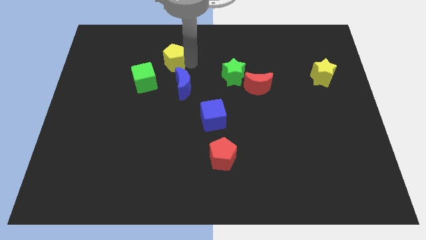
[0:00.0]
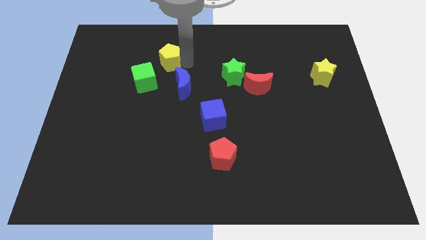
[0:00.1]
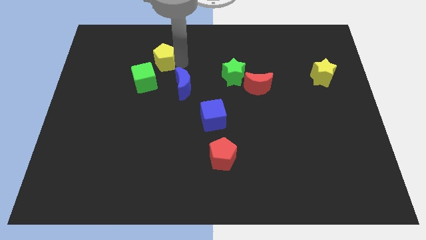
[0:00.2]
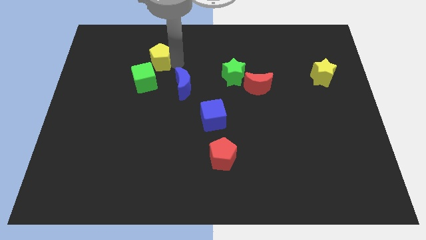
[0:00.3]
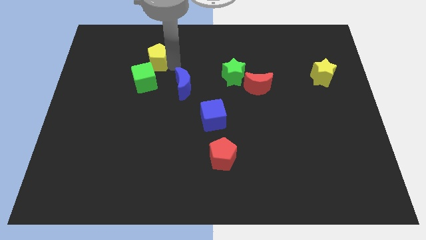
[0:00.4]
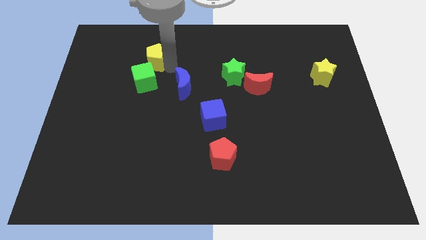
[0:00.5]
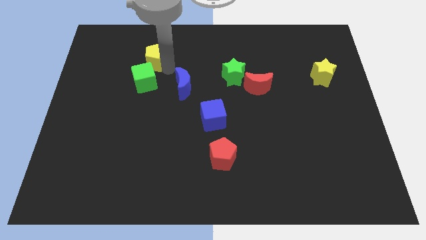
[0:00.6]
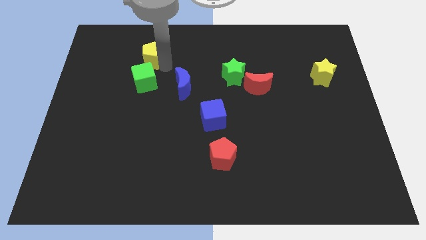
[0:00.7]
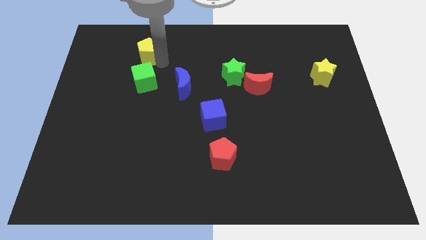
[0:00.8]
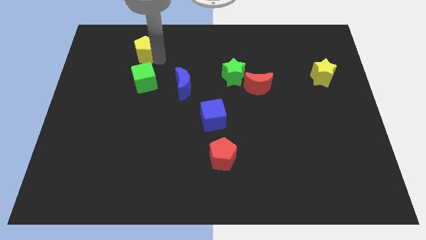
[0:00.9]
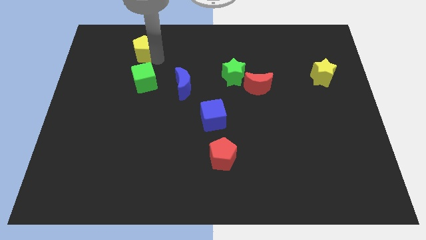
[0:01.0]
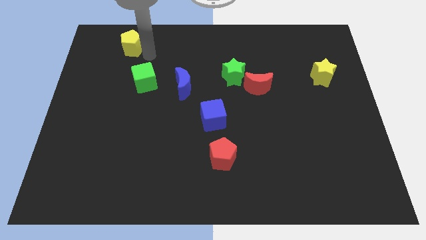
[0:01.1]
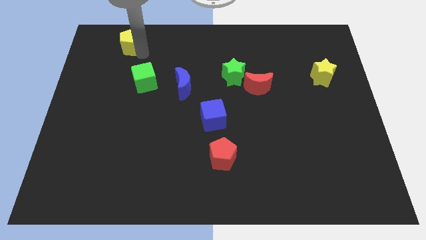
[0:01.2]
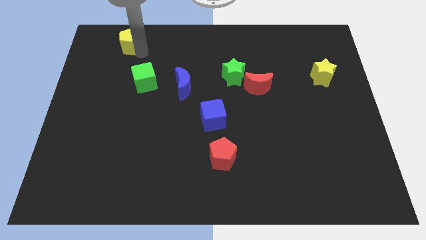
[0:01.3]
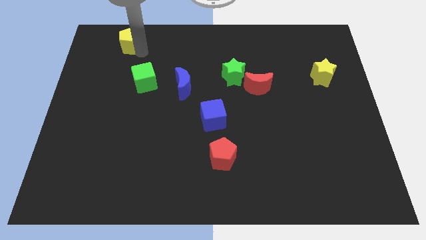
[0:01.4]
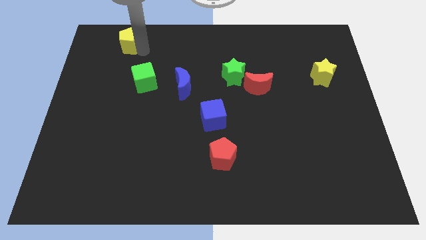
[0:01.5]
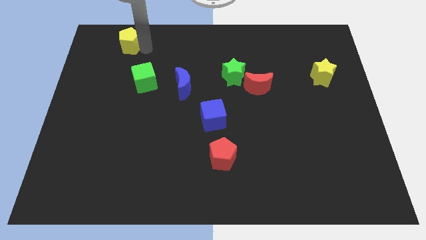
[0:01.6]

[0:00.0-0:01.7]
push the yellow pentagon parallel to the top of the green cube

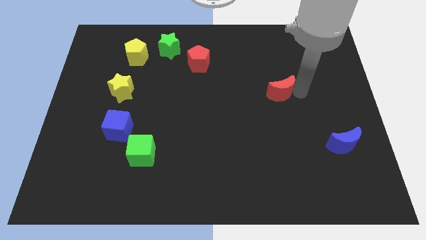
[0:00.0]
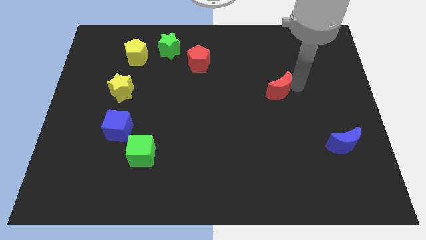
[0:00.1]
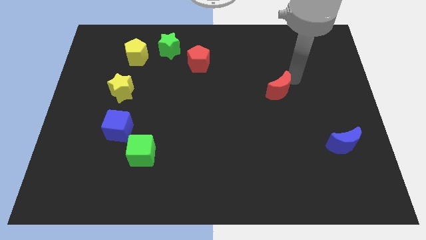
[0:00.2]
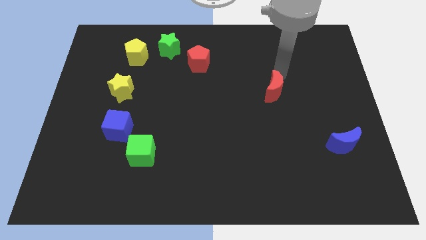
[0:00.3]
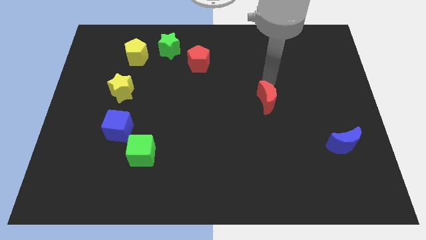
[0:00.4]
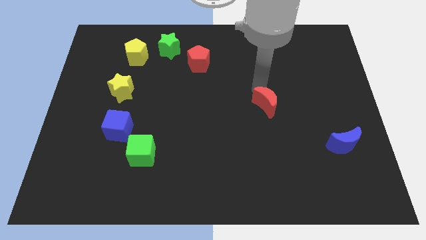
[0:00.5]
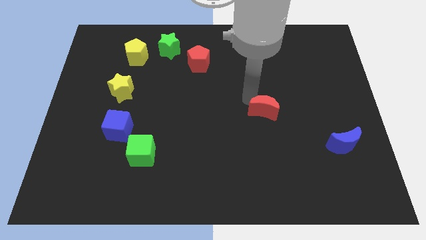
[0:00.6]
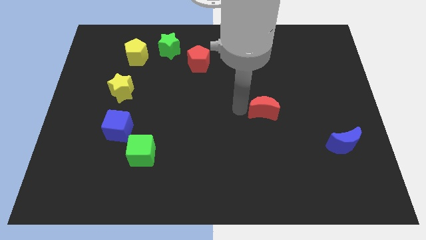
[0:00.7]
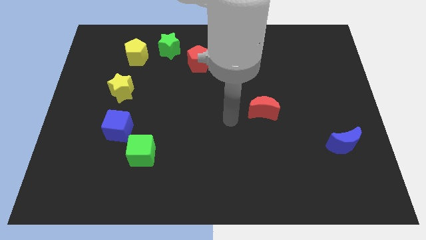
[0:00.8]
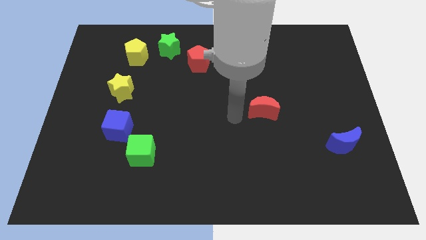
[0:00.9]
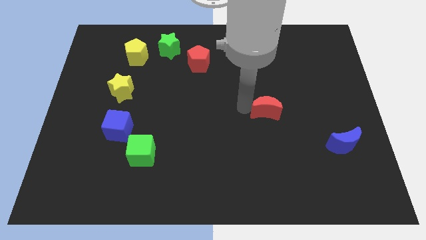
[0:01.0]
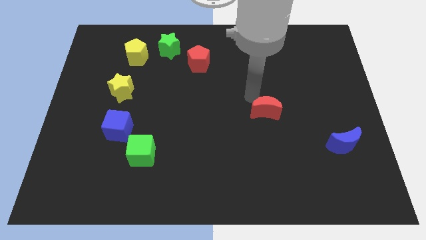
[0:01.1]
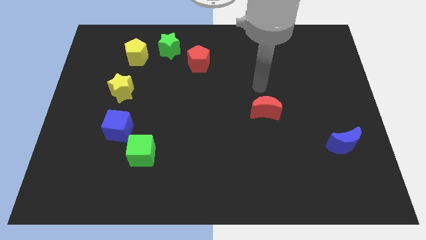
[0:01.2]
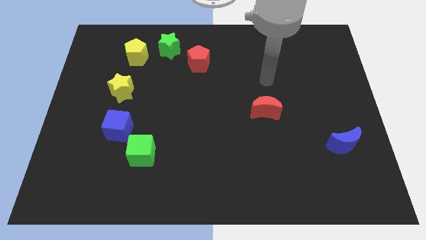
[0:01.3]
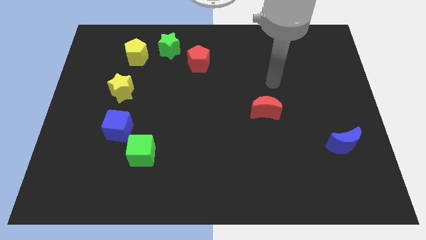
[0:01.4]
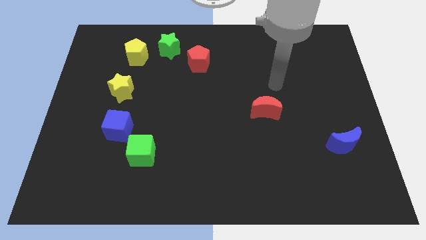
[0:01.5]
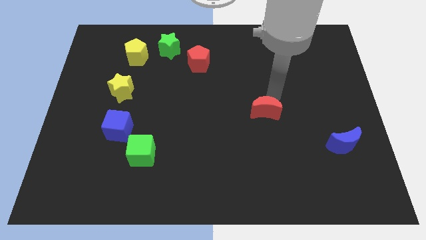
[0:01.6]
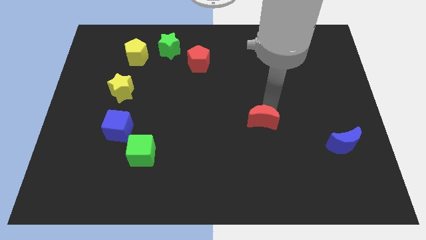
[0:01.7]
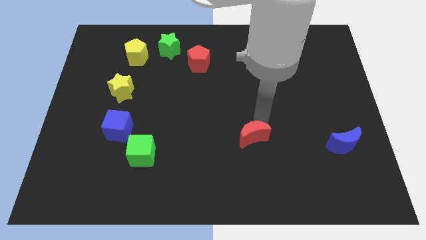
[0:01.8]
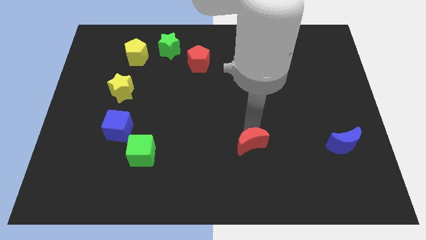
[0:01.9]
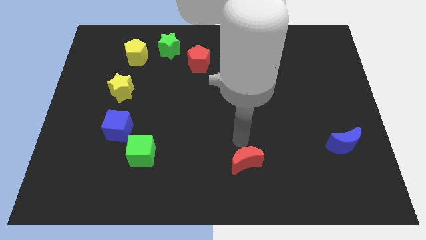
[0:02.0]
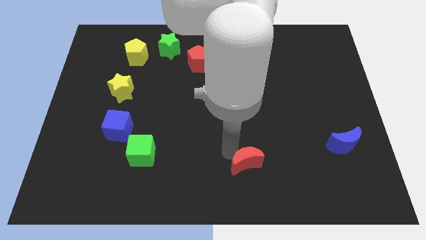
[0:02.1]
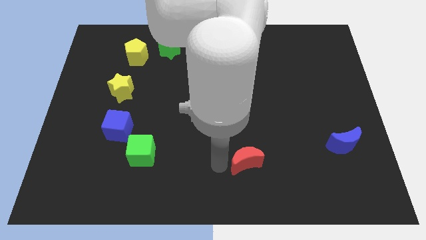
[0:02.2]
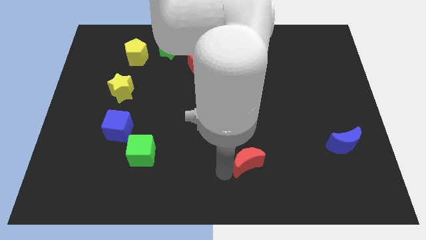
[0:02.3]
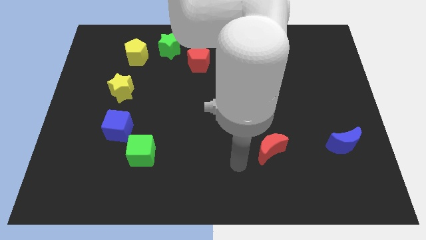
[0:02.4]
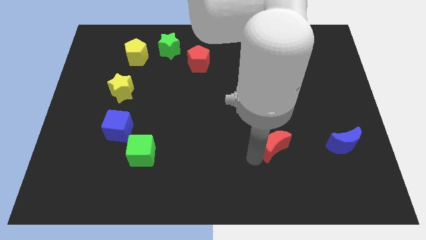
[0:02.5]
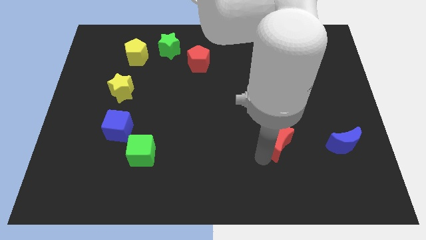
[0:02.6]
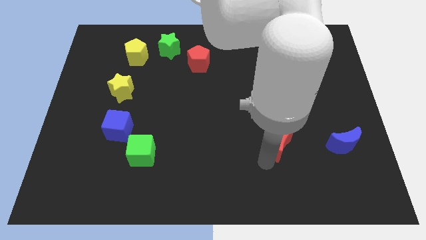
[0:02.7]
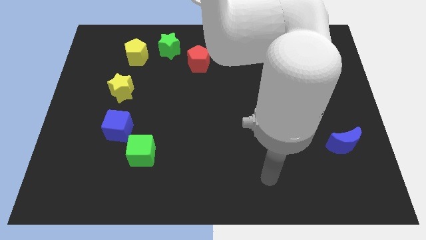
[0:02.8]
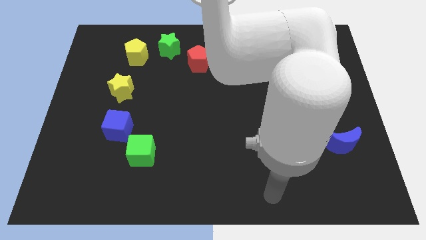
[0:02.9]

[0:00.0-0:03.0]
place the red moon towards the left side of the blue moon

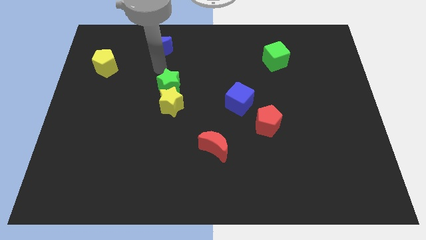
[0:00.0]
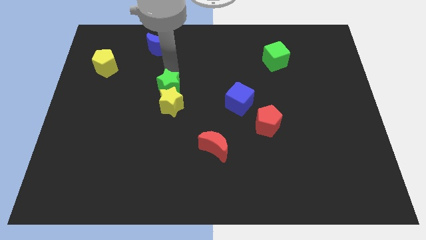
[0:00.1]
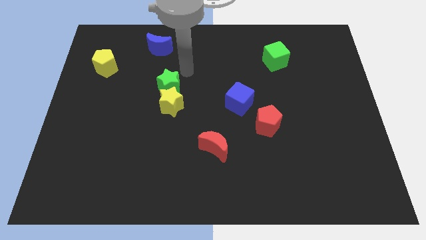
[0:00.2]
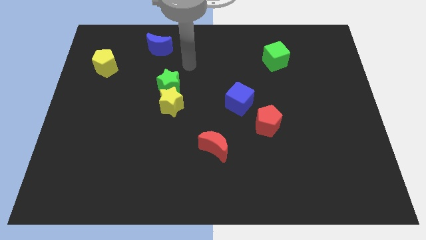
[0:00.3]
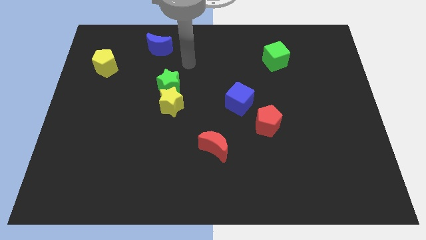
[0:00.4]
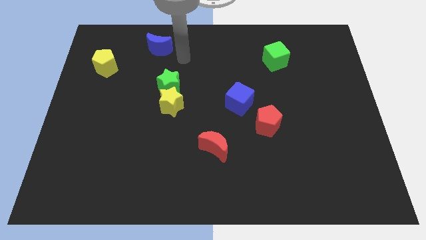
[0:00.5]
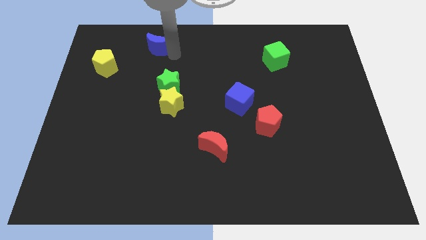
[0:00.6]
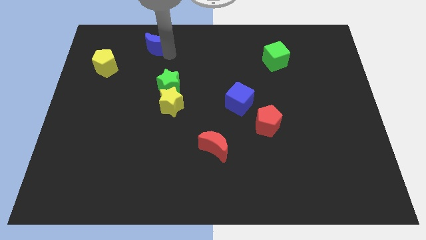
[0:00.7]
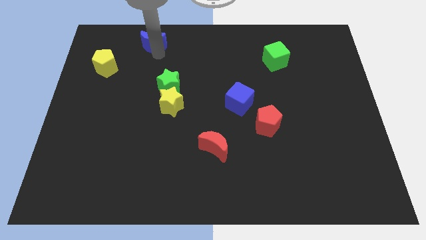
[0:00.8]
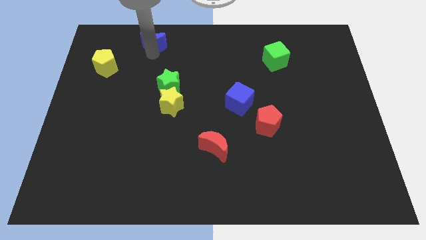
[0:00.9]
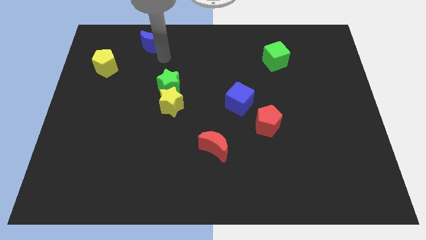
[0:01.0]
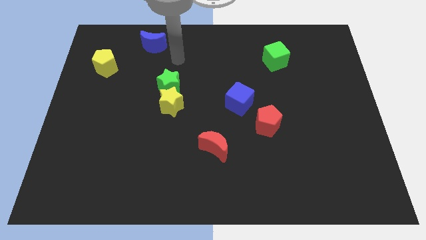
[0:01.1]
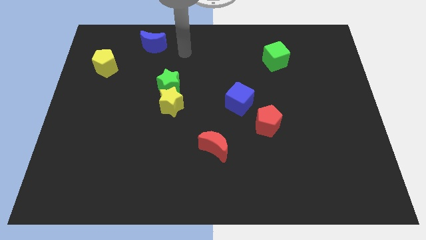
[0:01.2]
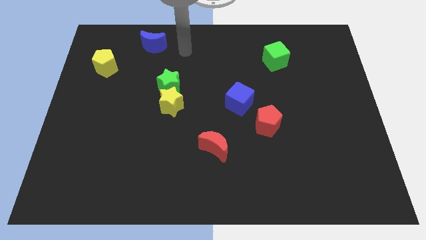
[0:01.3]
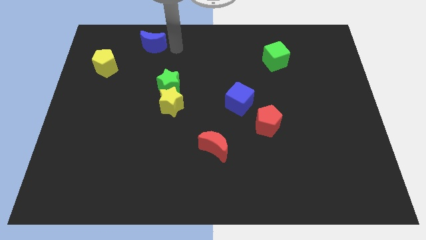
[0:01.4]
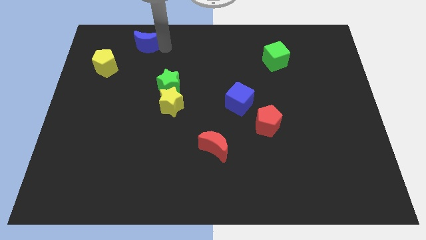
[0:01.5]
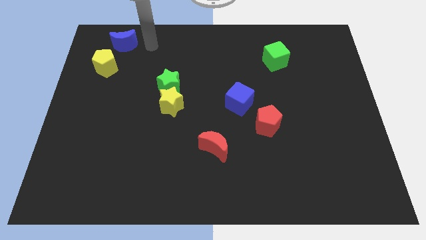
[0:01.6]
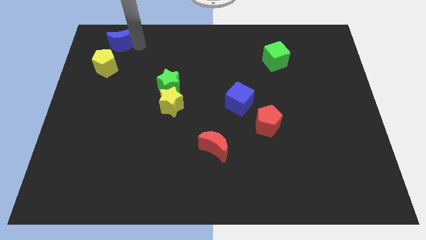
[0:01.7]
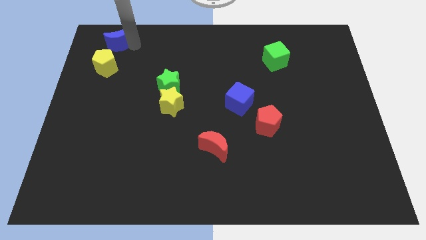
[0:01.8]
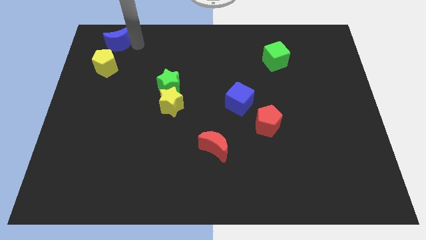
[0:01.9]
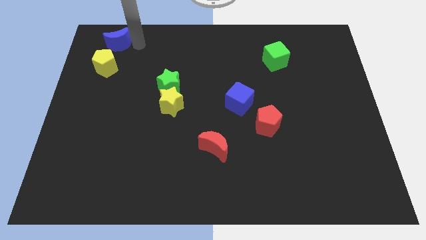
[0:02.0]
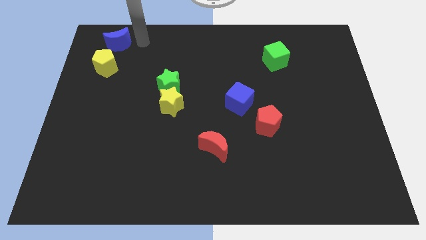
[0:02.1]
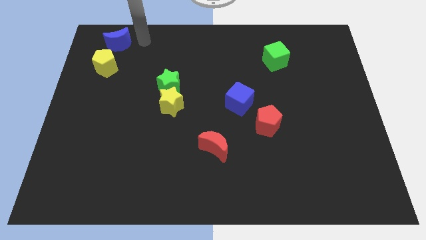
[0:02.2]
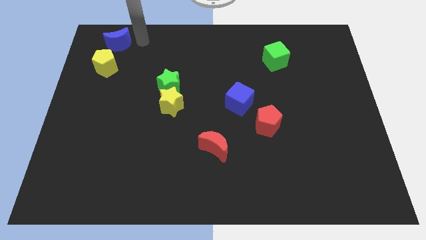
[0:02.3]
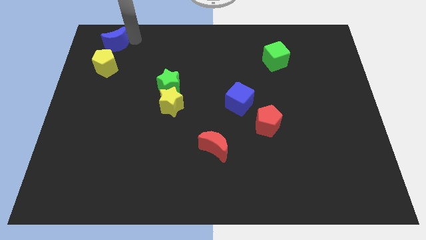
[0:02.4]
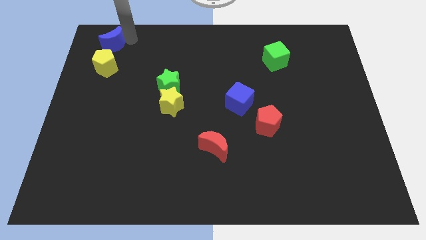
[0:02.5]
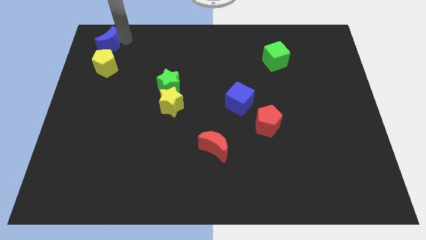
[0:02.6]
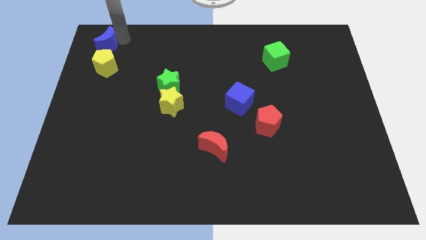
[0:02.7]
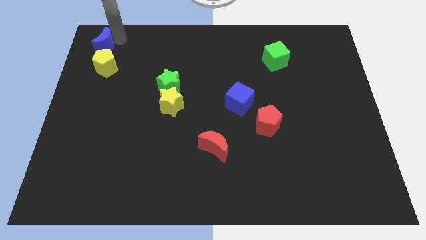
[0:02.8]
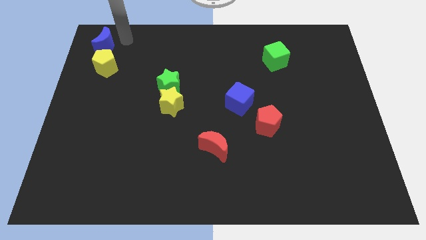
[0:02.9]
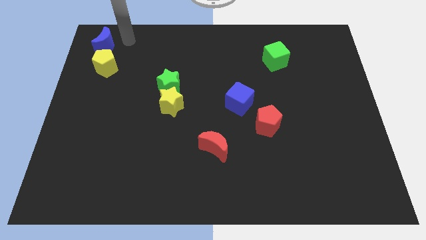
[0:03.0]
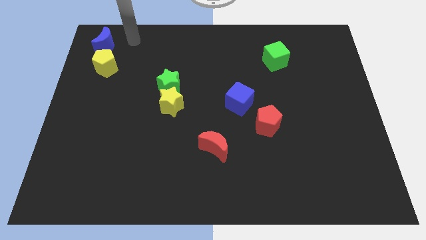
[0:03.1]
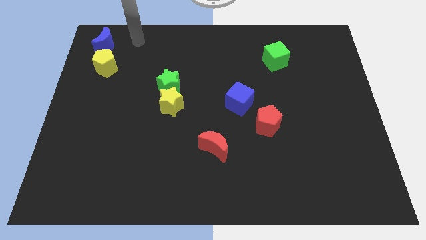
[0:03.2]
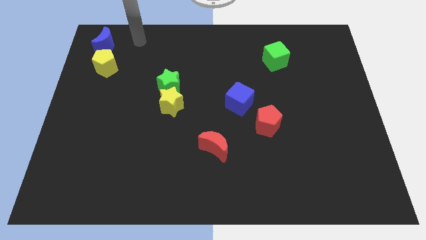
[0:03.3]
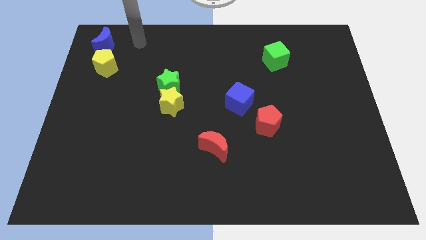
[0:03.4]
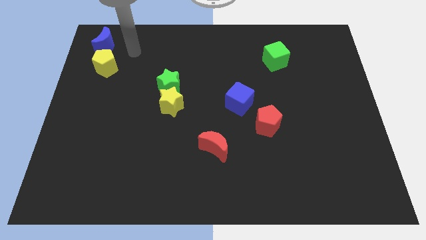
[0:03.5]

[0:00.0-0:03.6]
move blue moon to the top left corner of the board

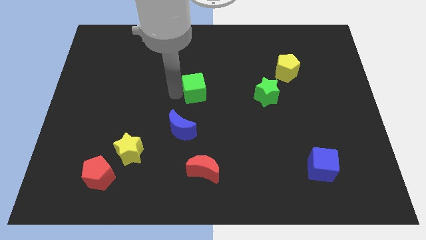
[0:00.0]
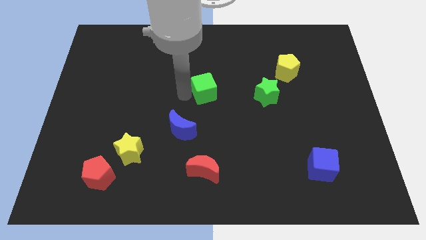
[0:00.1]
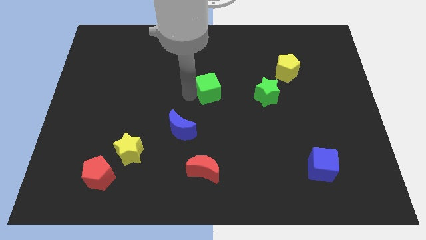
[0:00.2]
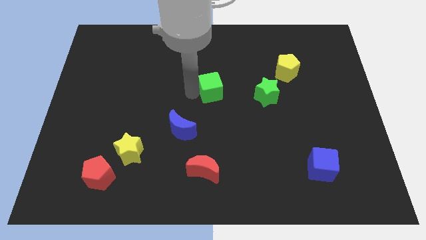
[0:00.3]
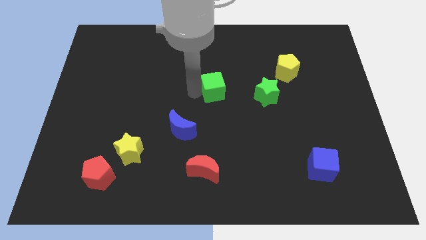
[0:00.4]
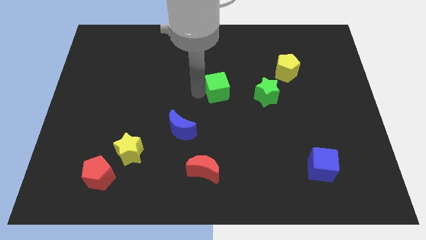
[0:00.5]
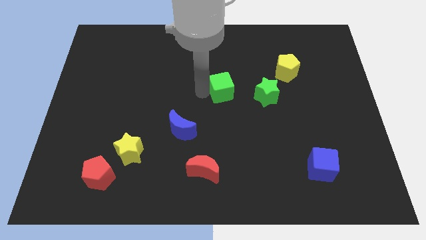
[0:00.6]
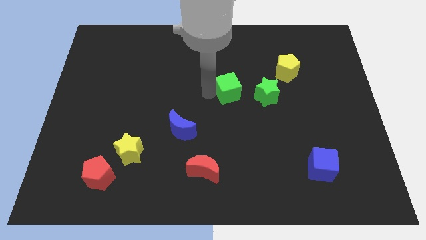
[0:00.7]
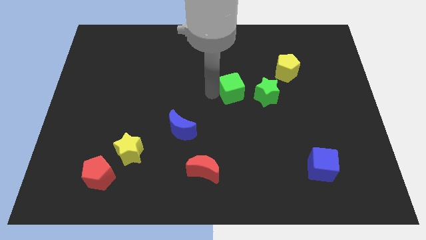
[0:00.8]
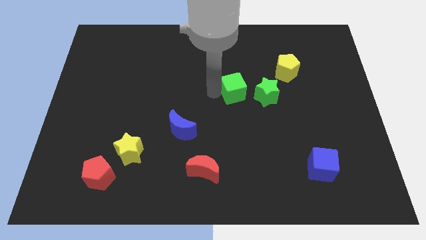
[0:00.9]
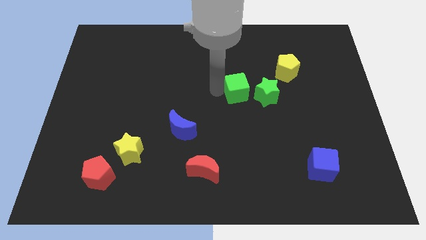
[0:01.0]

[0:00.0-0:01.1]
place green cube adjacent to green star
